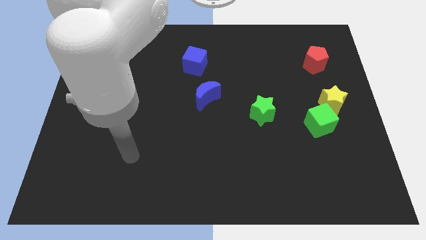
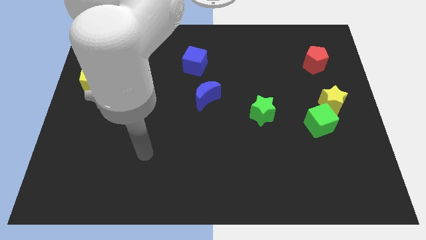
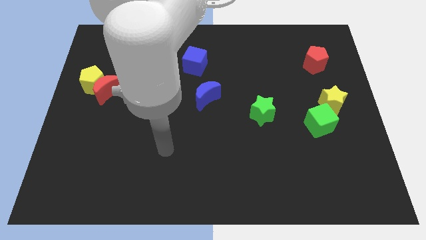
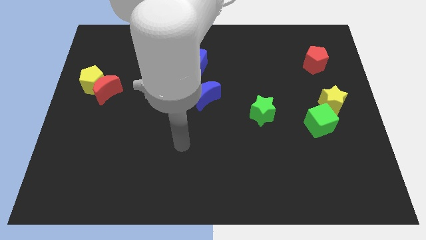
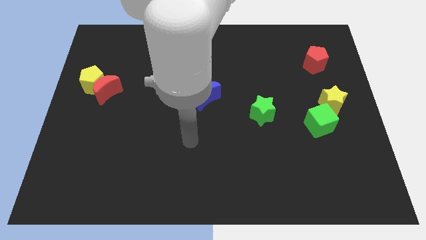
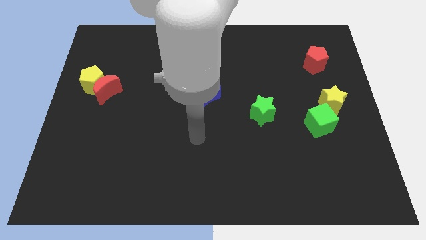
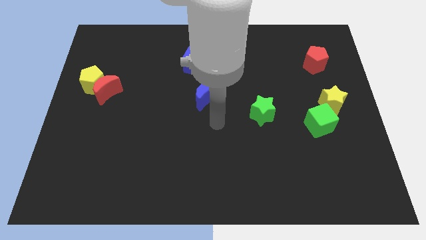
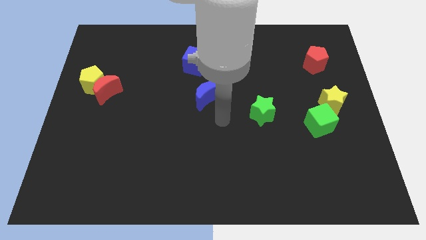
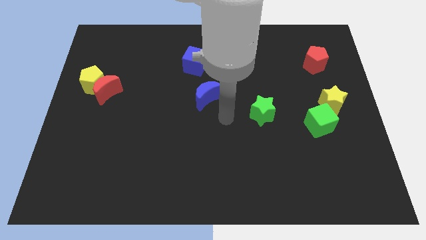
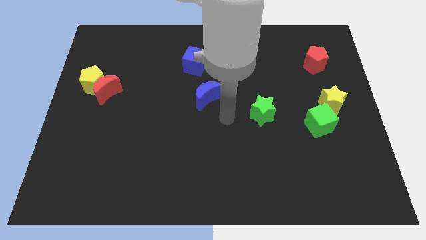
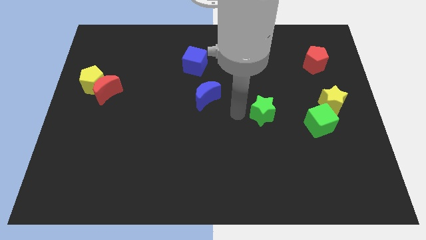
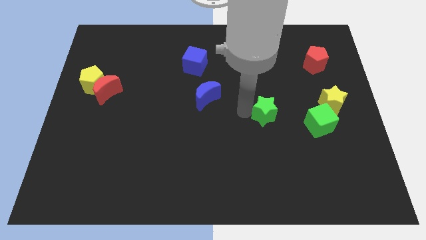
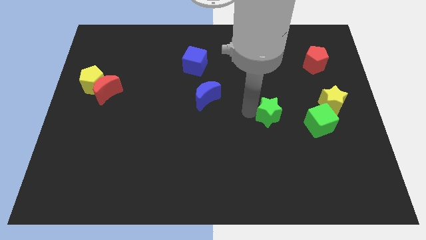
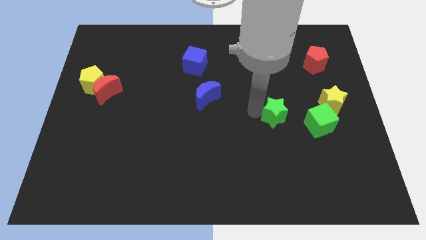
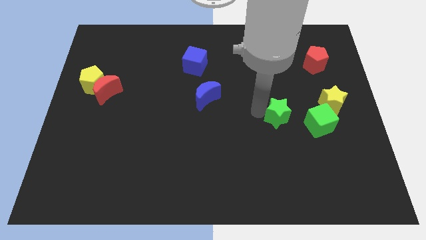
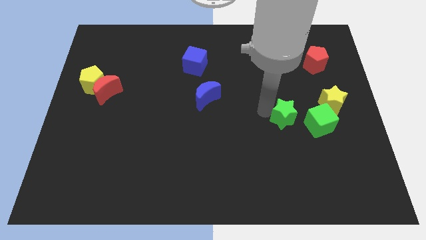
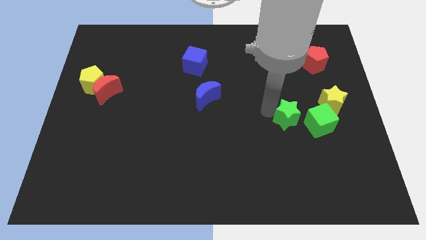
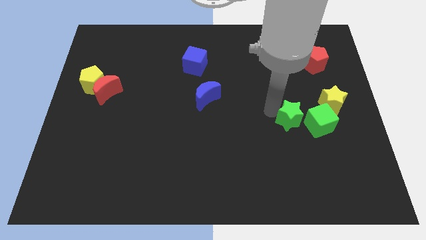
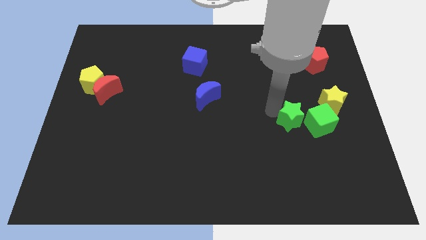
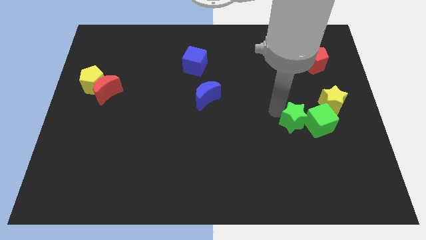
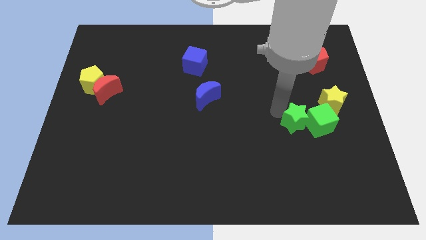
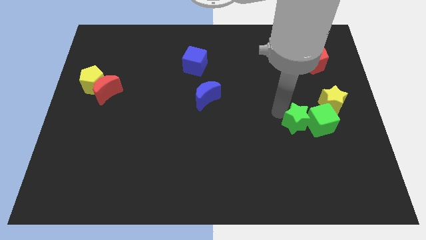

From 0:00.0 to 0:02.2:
move the green star close to the green cube

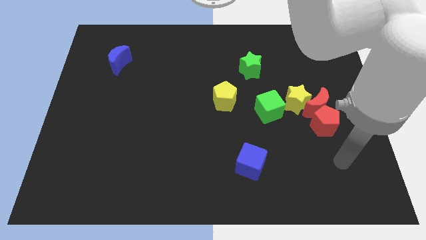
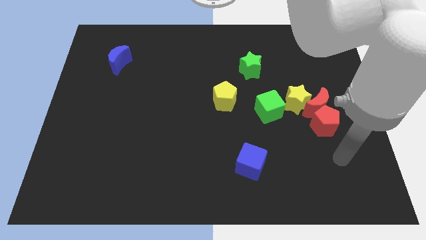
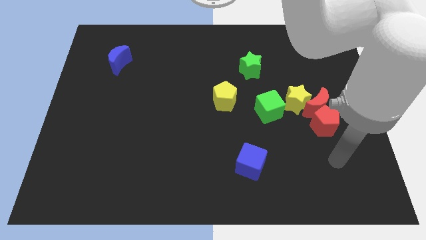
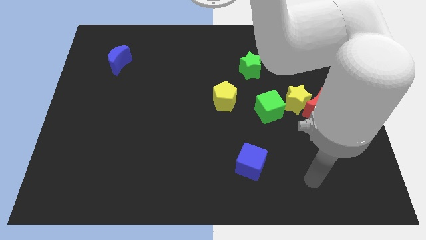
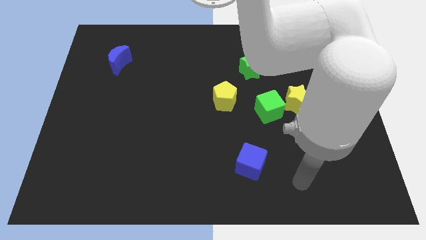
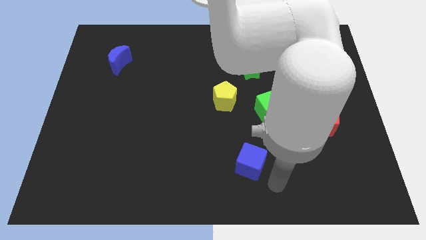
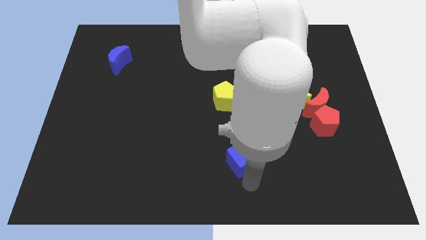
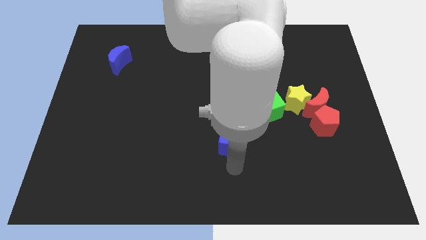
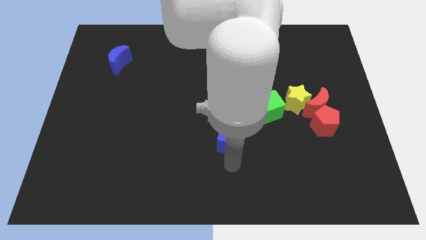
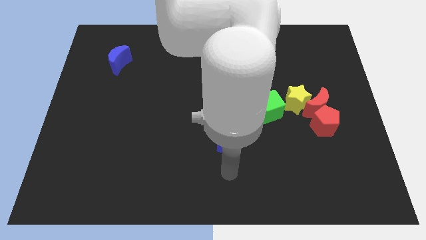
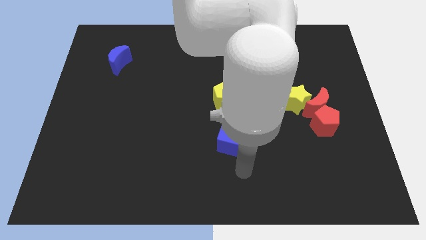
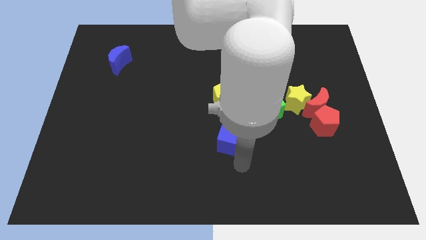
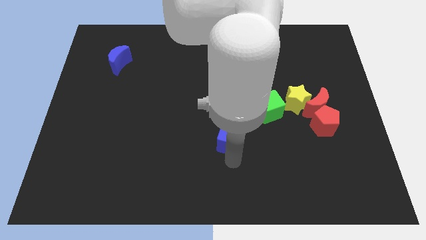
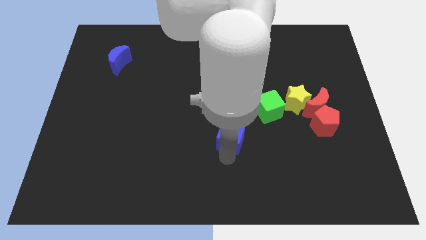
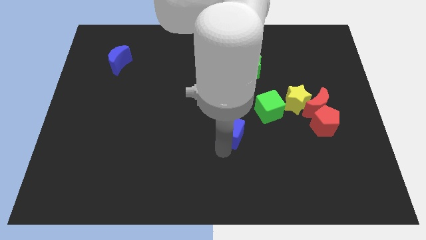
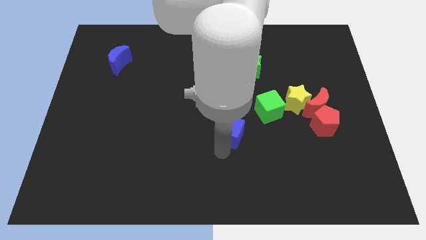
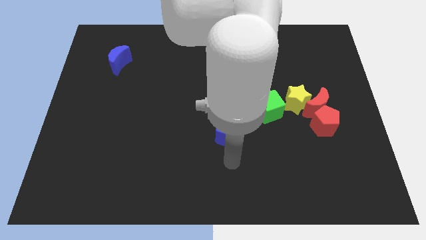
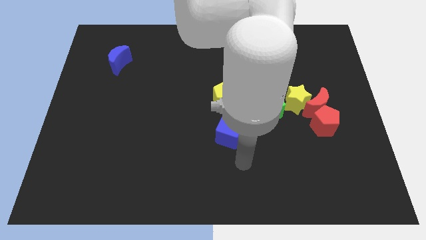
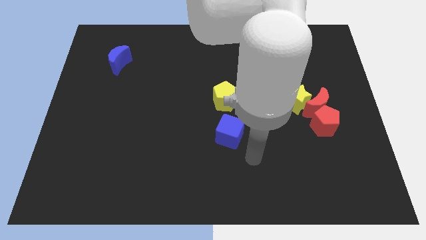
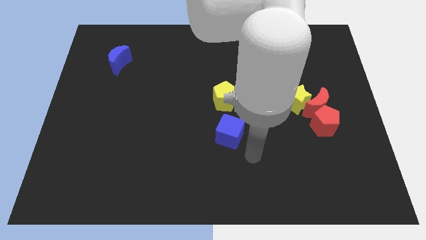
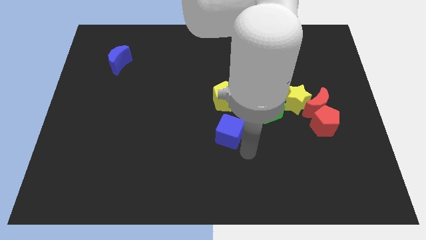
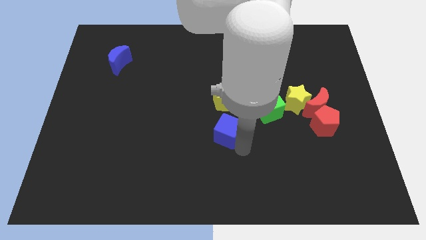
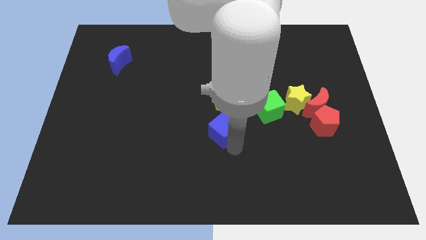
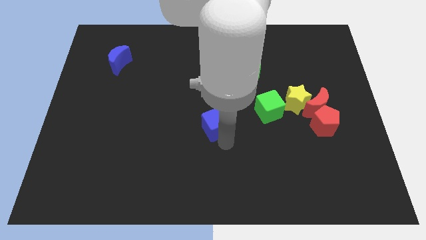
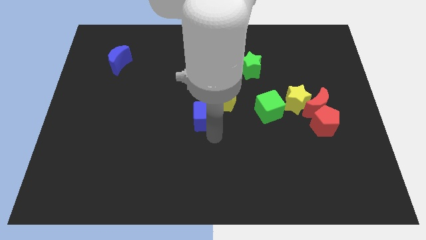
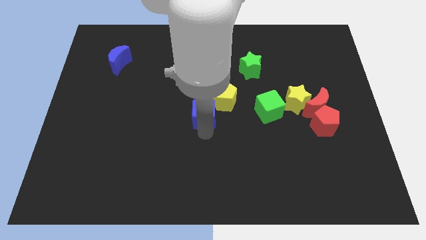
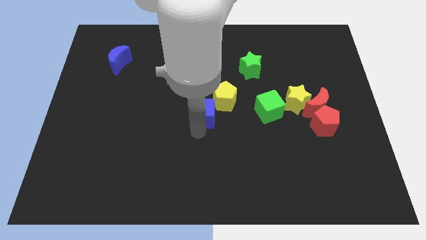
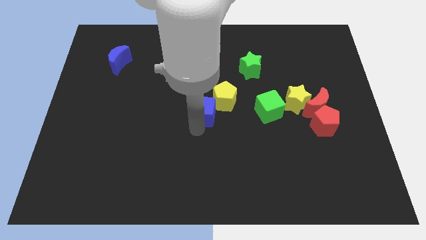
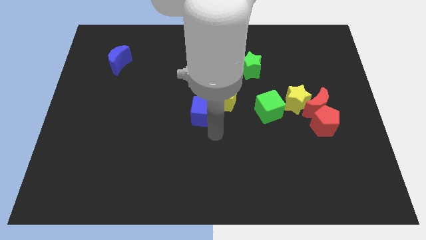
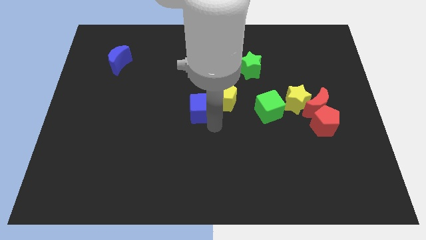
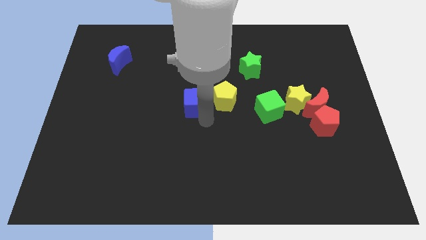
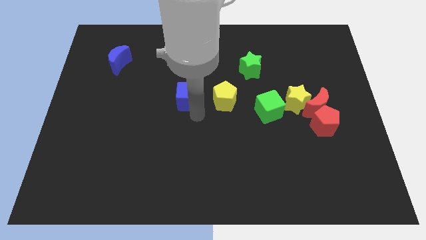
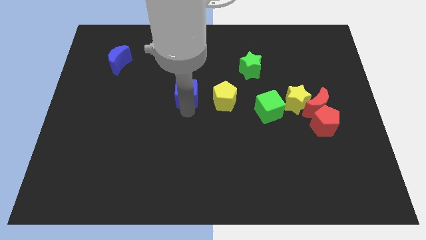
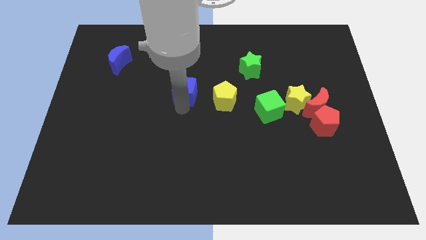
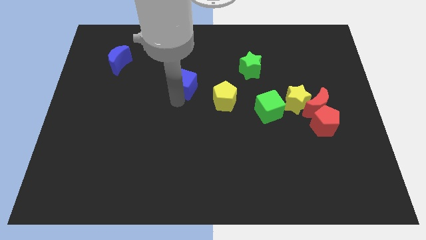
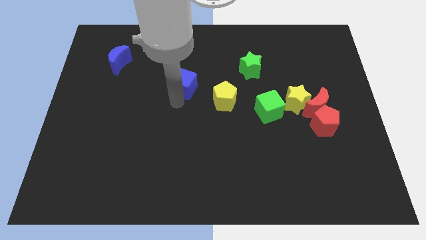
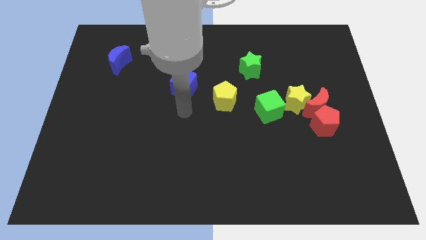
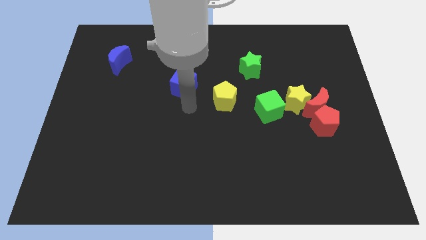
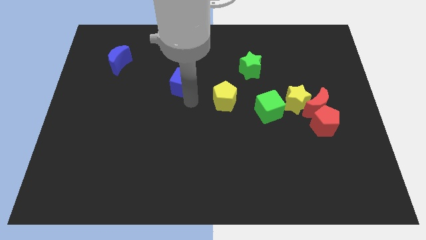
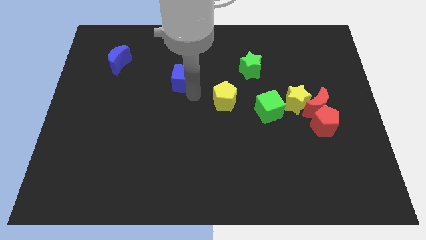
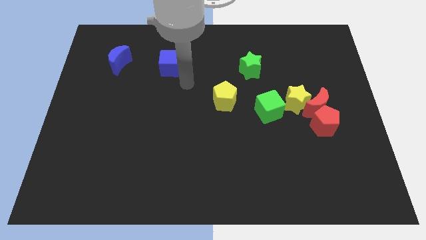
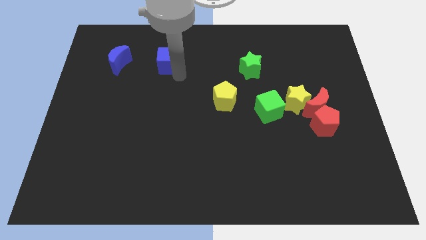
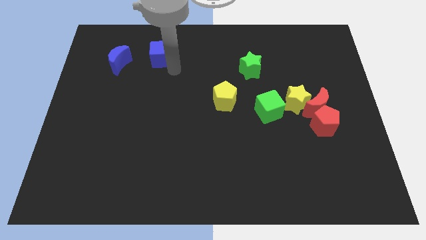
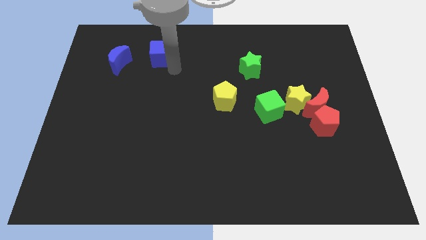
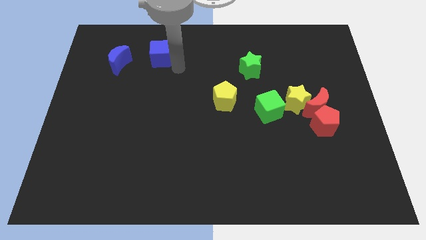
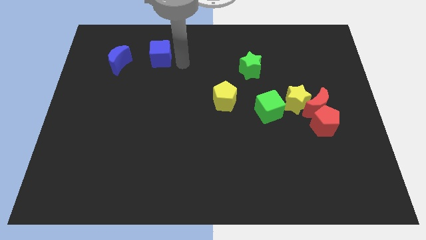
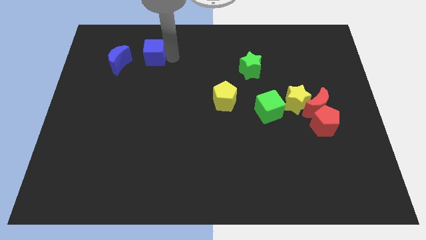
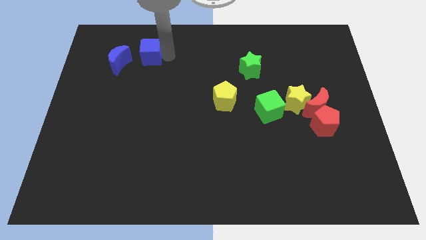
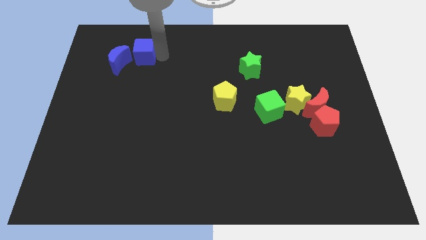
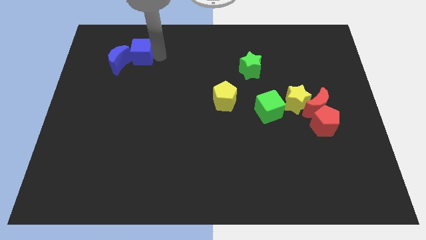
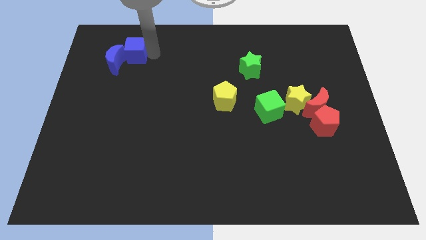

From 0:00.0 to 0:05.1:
slide the blue cube towards the blue moon

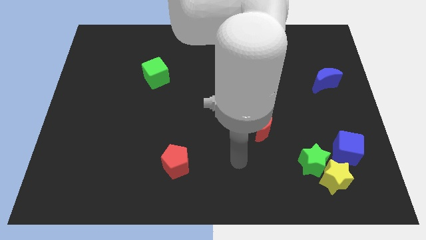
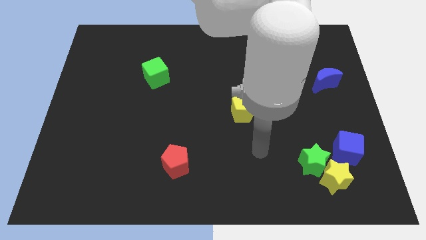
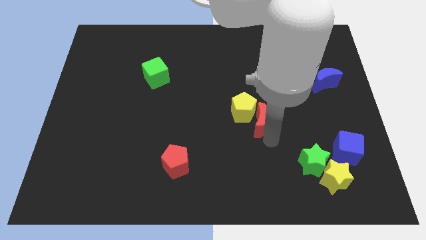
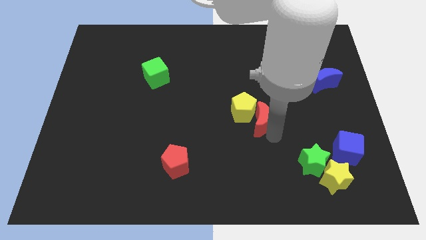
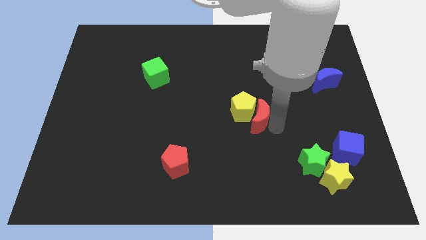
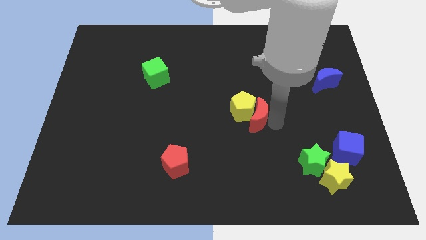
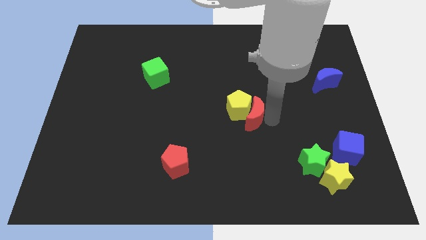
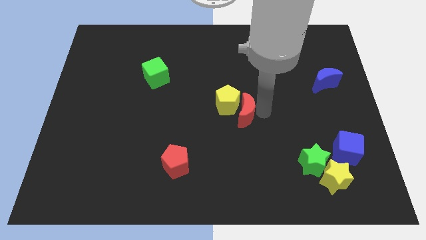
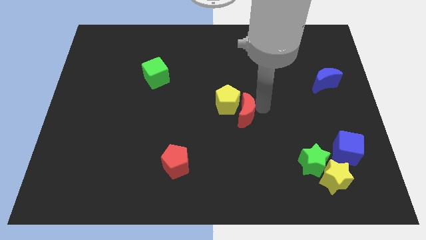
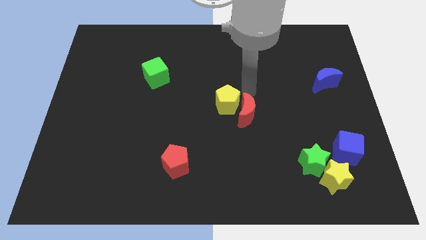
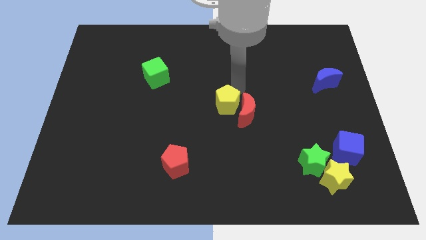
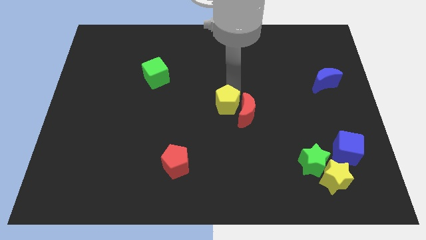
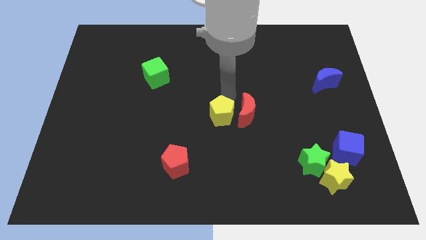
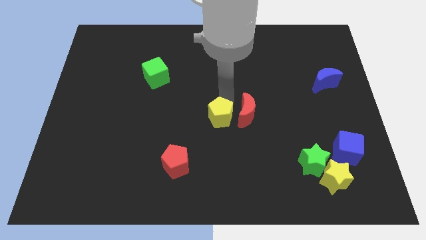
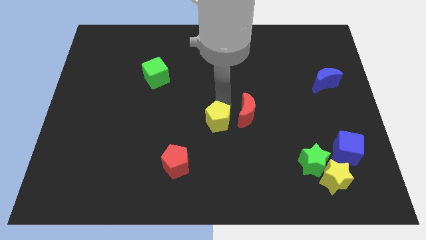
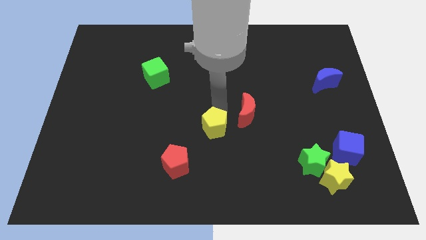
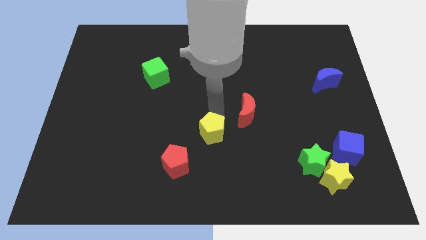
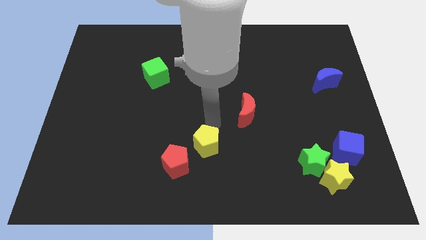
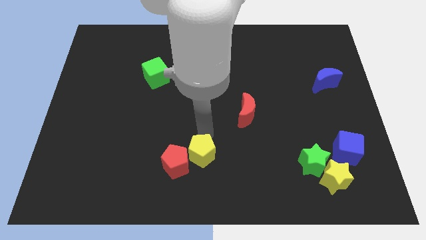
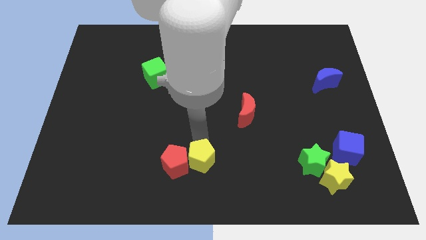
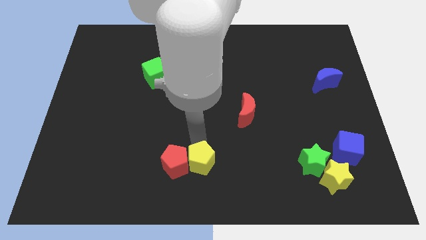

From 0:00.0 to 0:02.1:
slide the yellow pentagon next to the red pentagon
